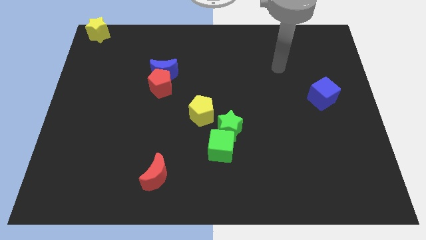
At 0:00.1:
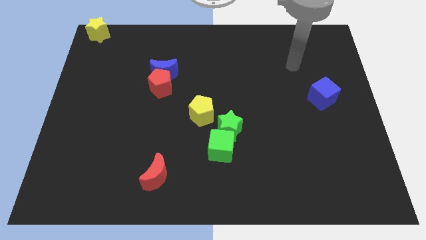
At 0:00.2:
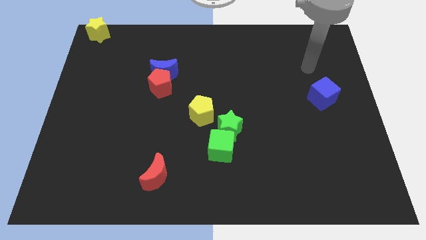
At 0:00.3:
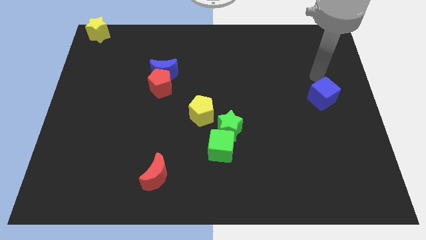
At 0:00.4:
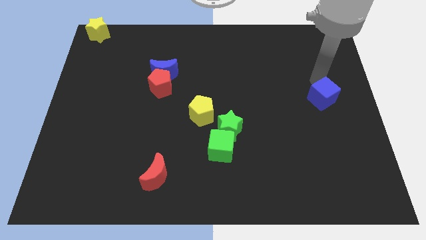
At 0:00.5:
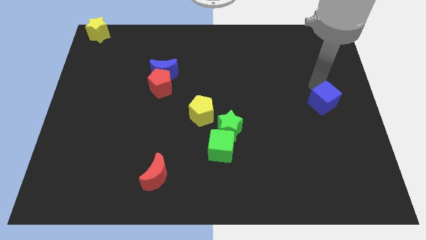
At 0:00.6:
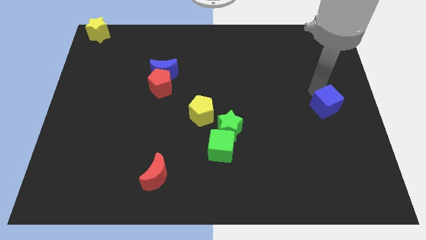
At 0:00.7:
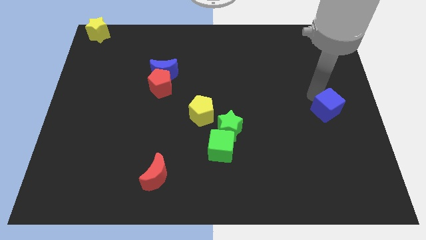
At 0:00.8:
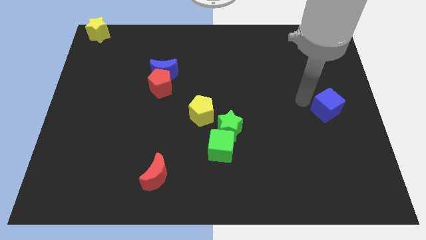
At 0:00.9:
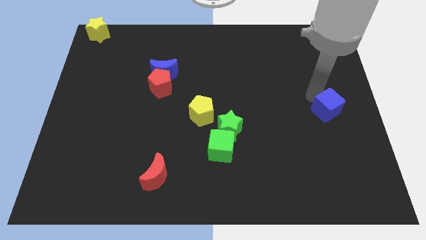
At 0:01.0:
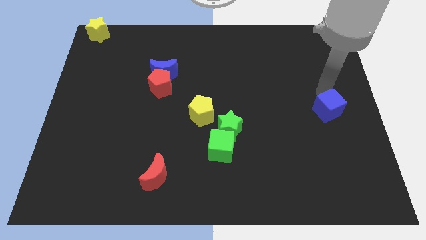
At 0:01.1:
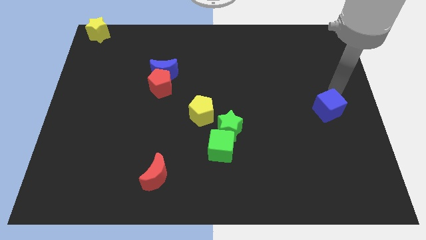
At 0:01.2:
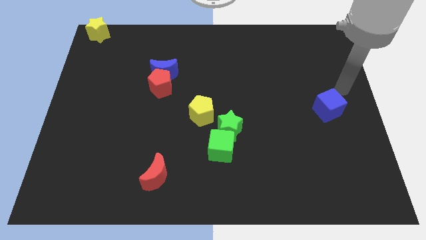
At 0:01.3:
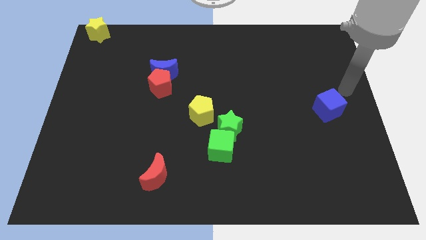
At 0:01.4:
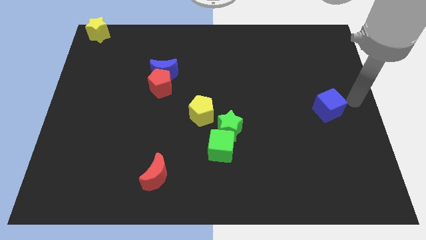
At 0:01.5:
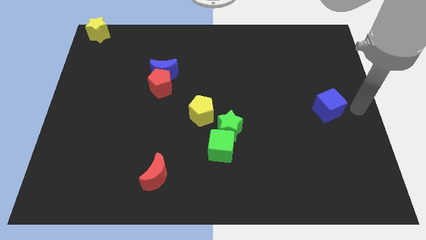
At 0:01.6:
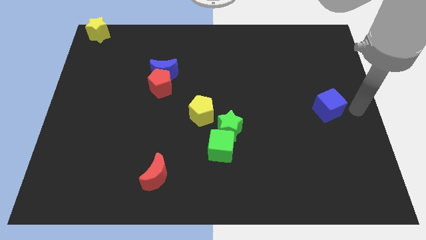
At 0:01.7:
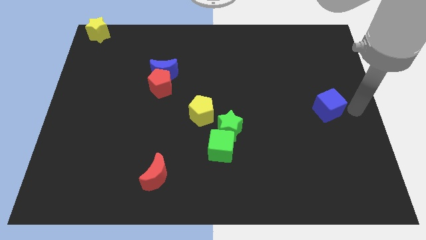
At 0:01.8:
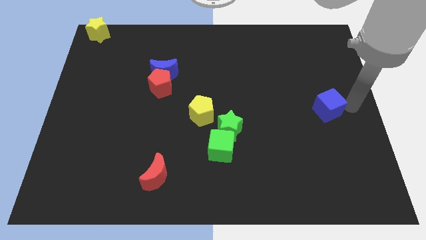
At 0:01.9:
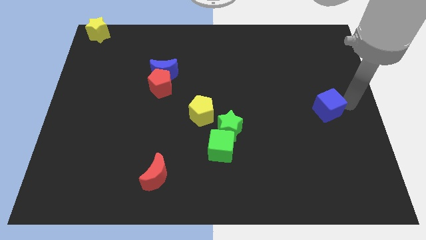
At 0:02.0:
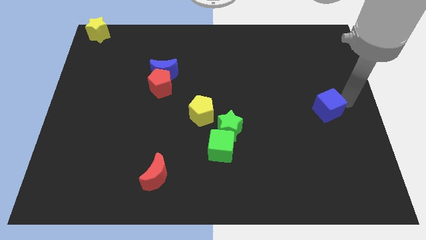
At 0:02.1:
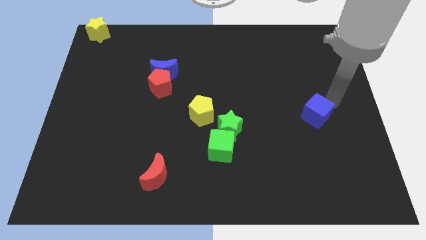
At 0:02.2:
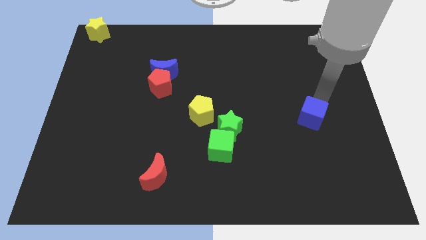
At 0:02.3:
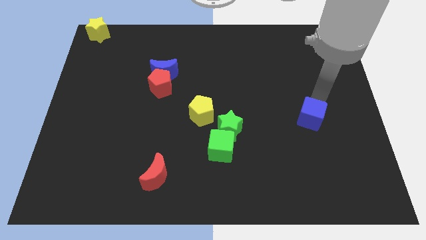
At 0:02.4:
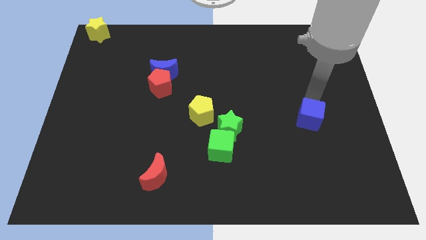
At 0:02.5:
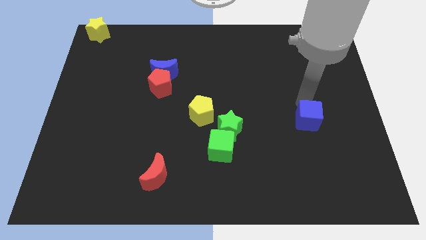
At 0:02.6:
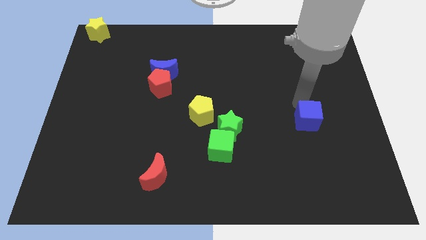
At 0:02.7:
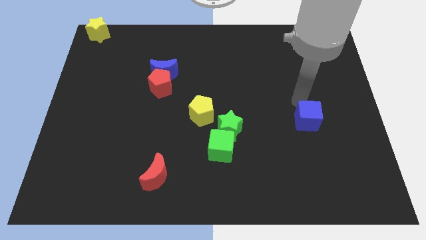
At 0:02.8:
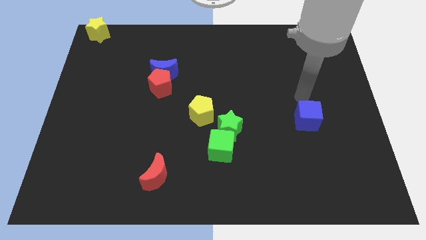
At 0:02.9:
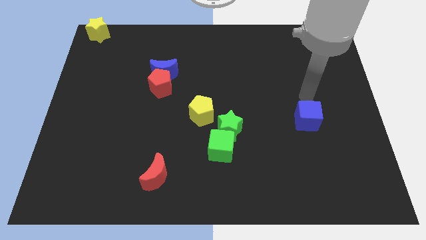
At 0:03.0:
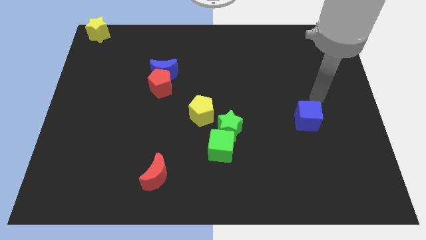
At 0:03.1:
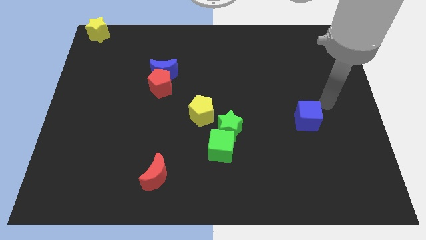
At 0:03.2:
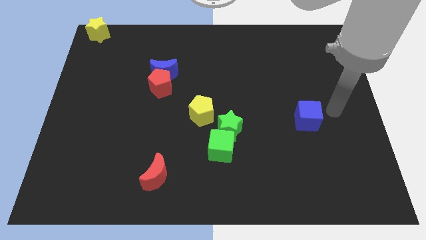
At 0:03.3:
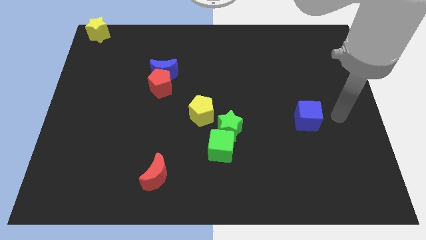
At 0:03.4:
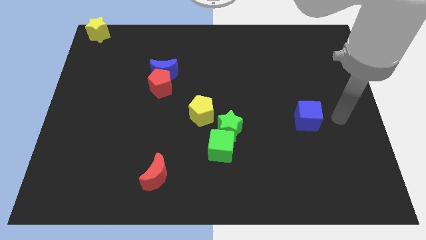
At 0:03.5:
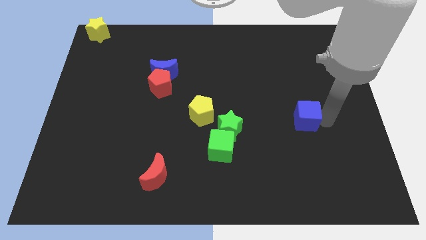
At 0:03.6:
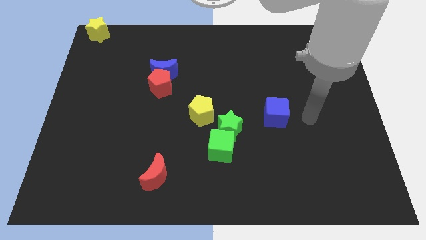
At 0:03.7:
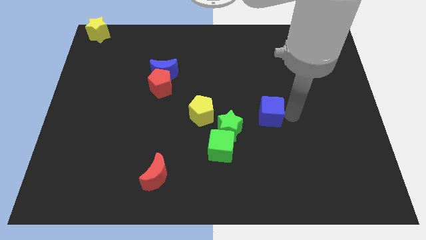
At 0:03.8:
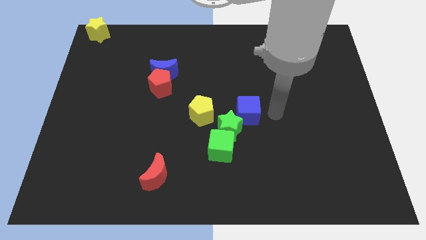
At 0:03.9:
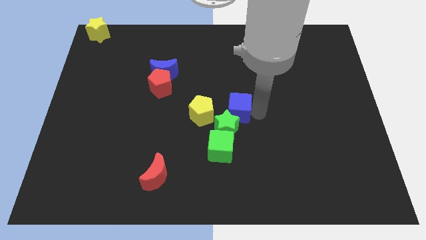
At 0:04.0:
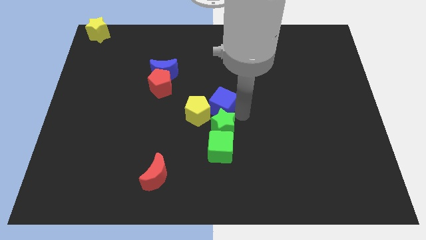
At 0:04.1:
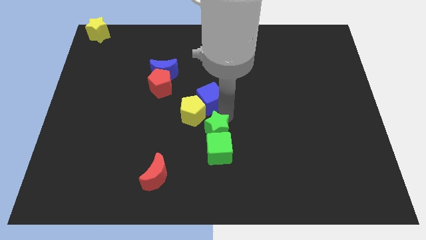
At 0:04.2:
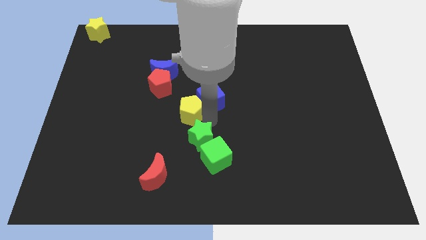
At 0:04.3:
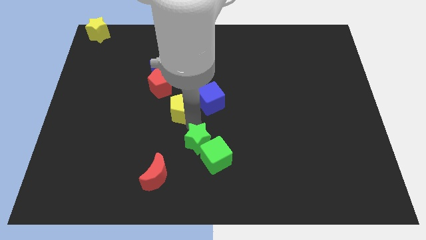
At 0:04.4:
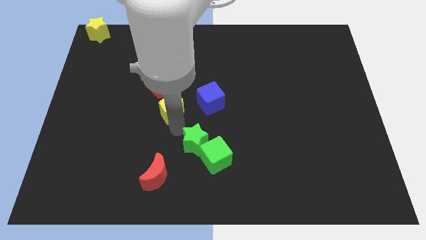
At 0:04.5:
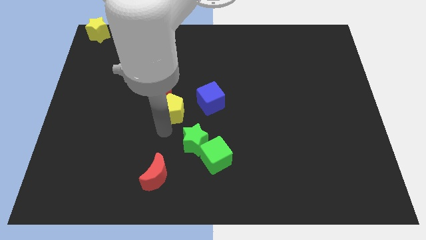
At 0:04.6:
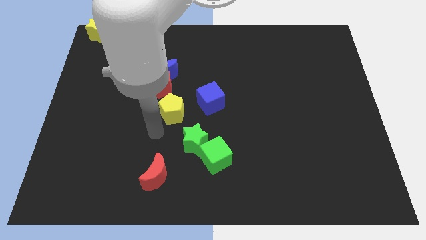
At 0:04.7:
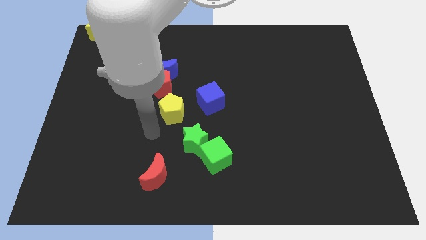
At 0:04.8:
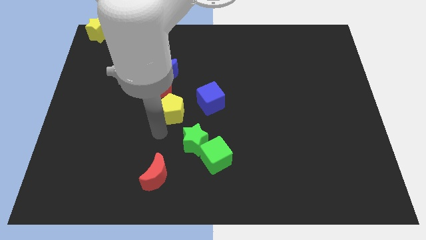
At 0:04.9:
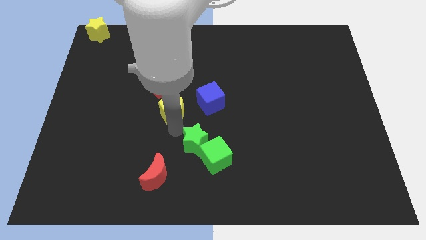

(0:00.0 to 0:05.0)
push the blue cube into the yellow pentagon

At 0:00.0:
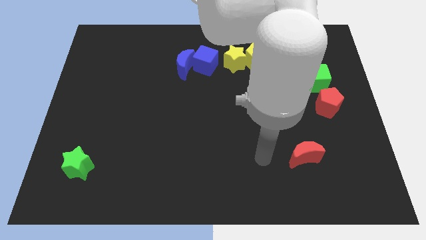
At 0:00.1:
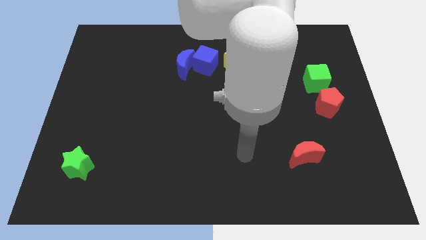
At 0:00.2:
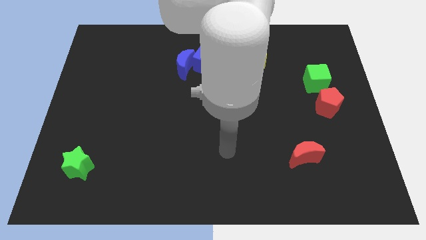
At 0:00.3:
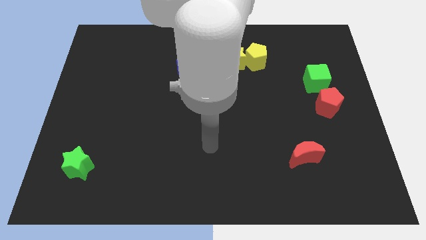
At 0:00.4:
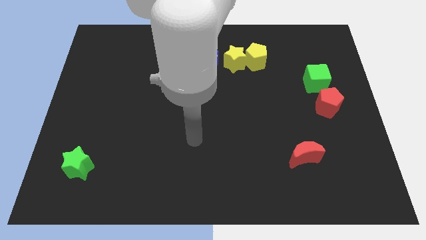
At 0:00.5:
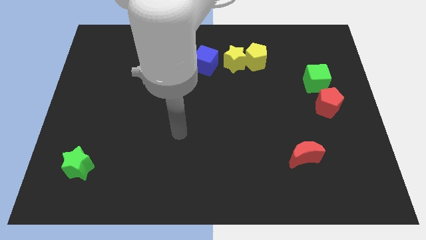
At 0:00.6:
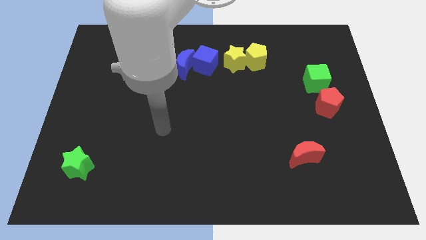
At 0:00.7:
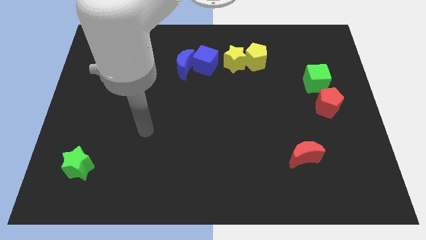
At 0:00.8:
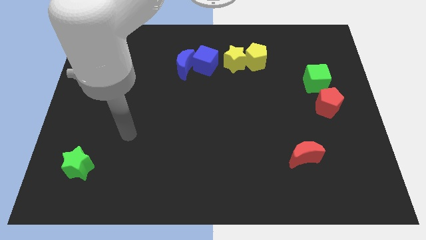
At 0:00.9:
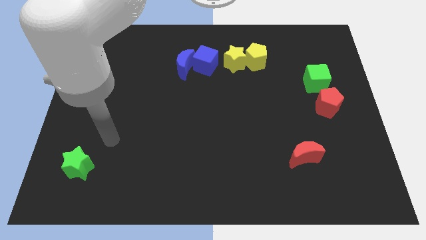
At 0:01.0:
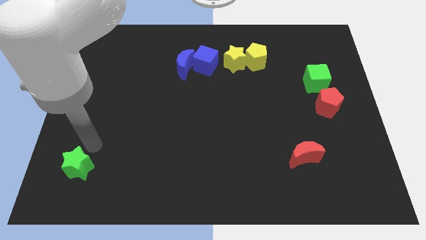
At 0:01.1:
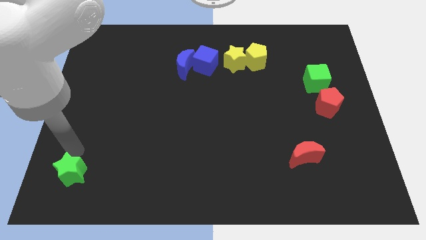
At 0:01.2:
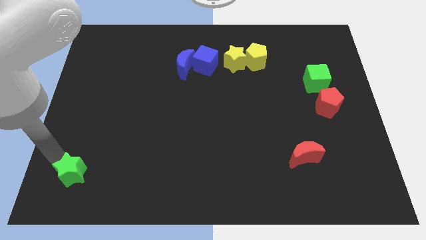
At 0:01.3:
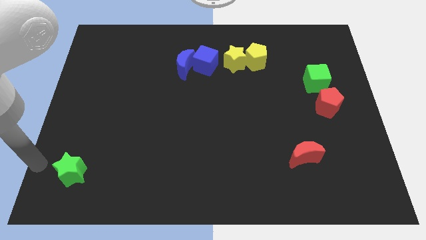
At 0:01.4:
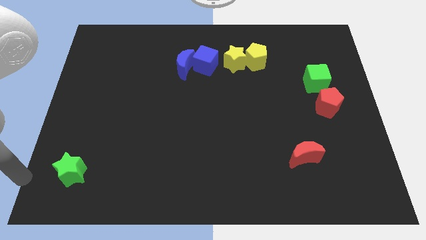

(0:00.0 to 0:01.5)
move your arm to the left of the green star

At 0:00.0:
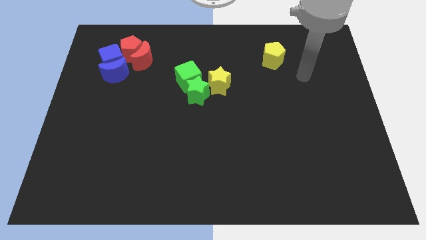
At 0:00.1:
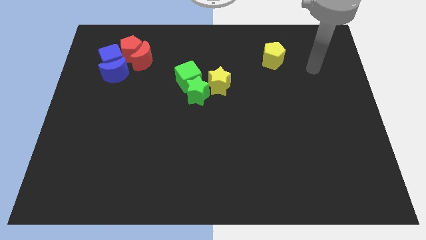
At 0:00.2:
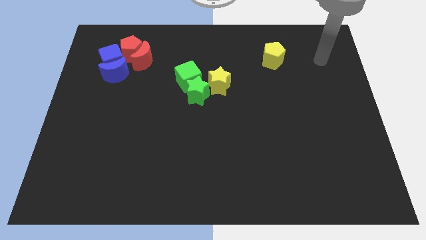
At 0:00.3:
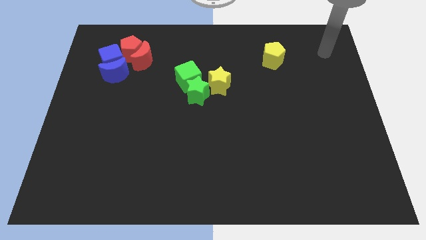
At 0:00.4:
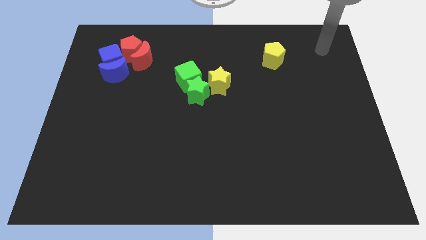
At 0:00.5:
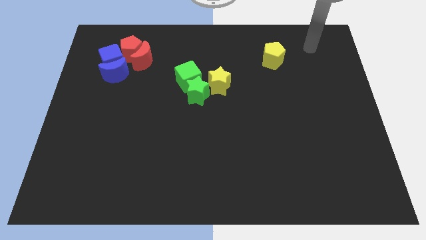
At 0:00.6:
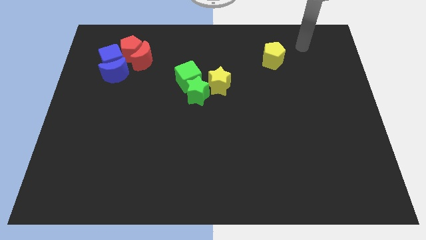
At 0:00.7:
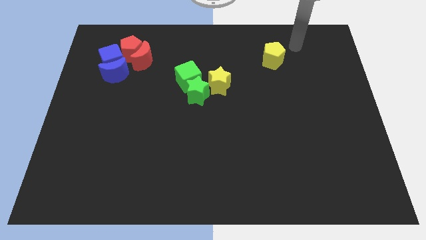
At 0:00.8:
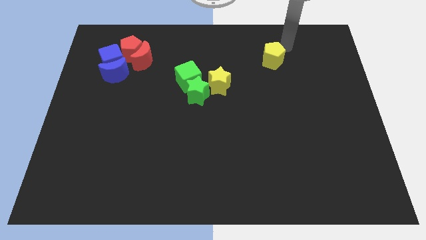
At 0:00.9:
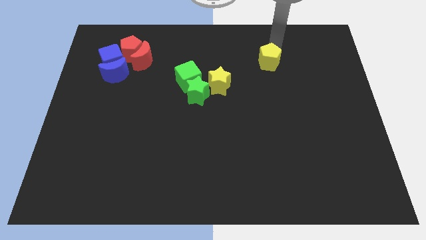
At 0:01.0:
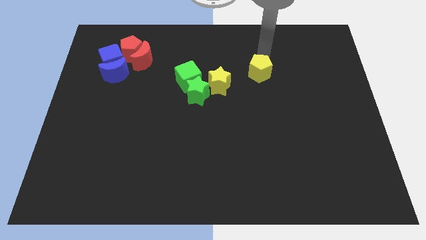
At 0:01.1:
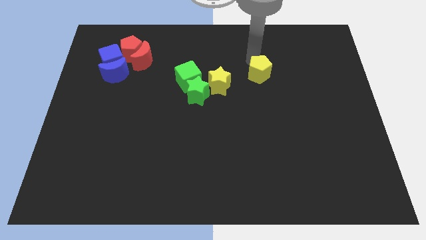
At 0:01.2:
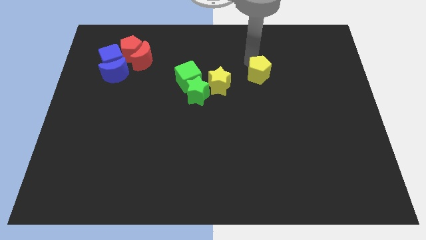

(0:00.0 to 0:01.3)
push yellow pentagon slightly close to the yellow star

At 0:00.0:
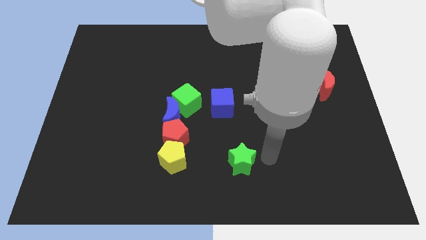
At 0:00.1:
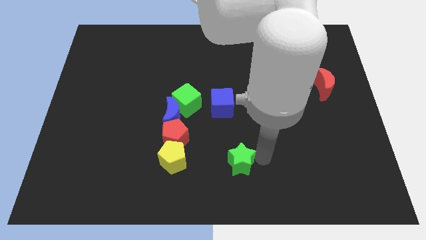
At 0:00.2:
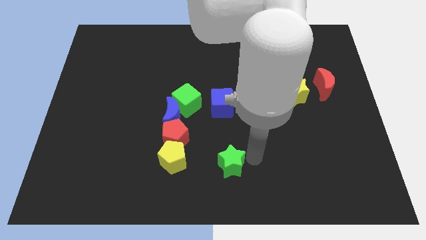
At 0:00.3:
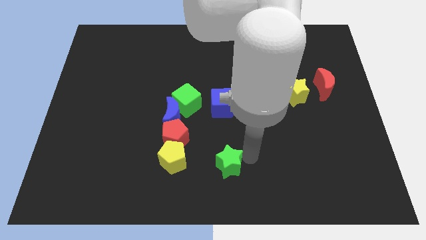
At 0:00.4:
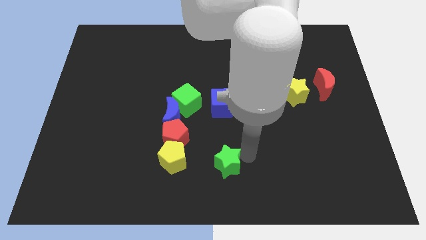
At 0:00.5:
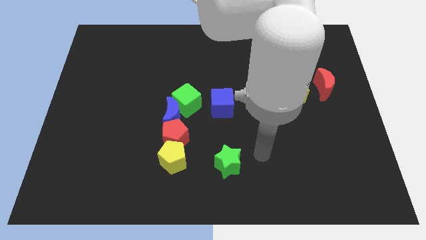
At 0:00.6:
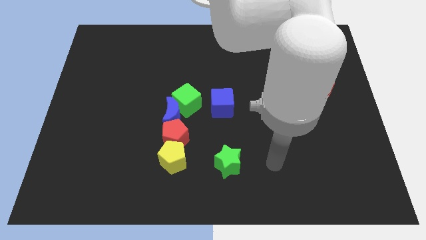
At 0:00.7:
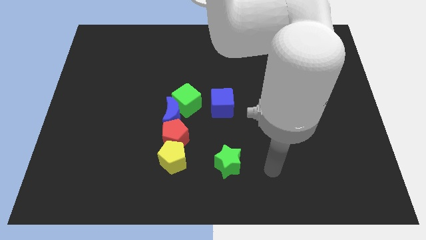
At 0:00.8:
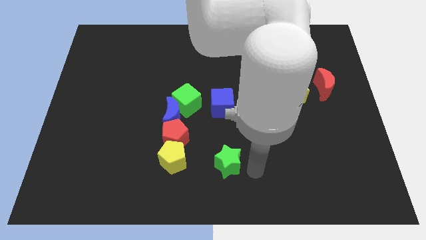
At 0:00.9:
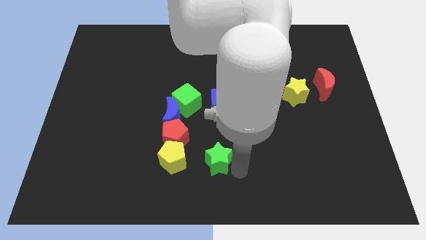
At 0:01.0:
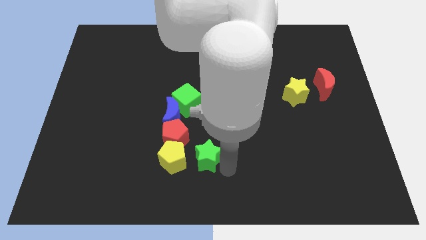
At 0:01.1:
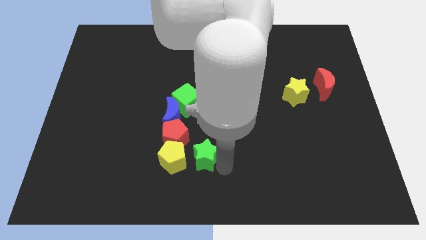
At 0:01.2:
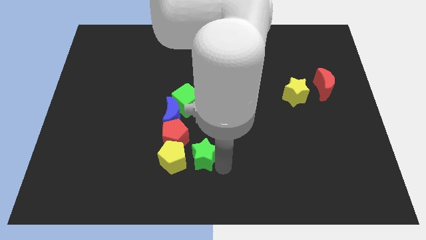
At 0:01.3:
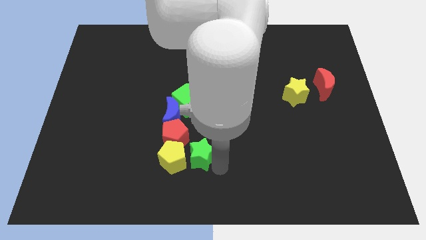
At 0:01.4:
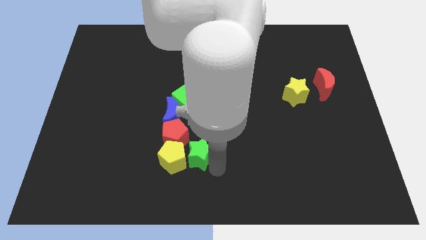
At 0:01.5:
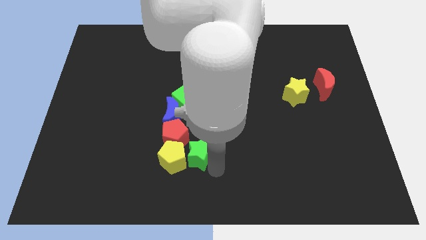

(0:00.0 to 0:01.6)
place green star adjacent to yellow pentagon
